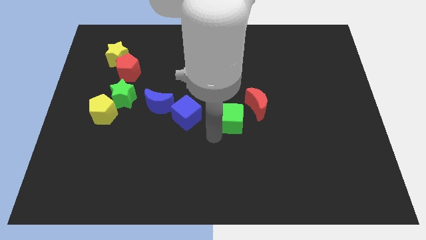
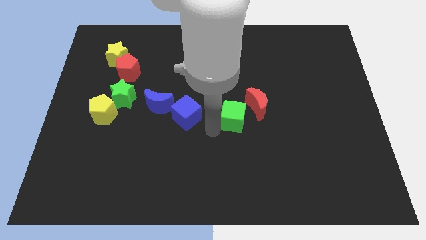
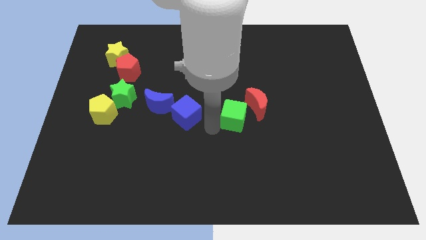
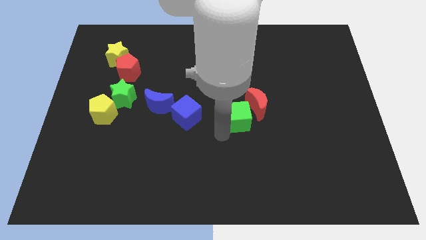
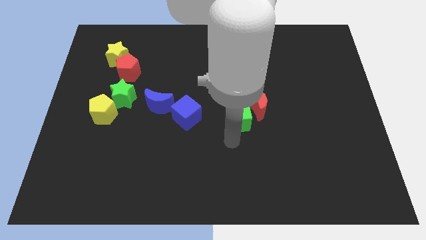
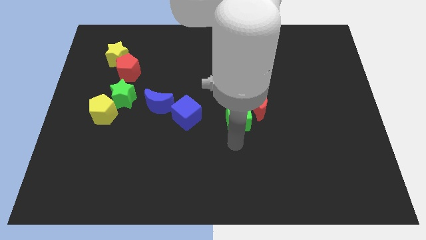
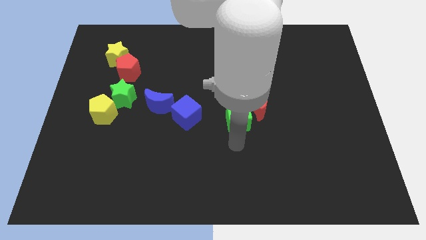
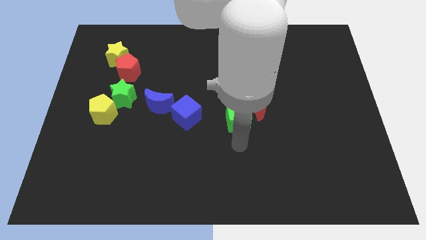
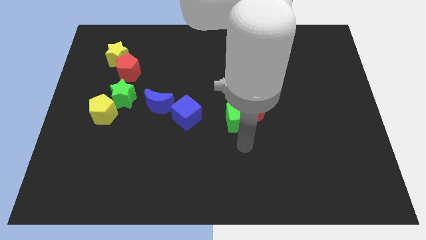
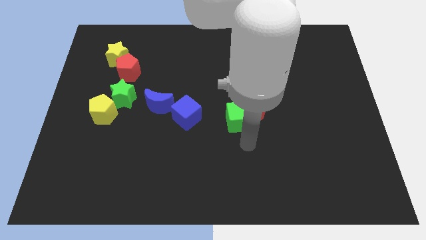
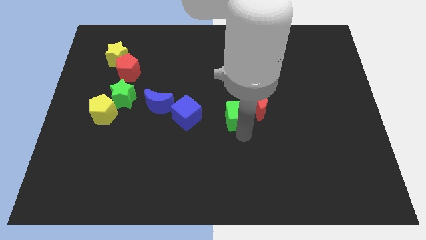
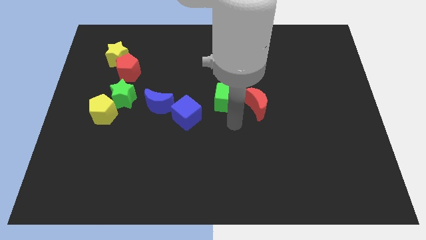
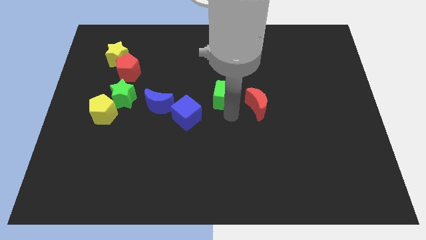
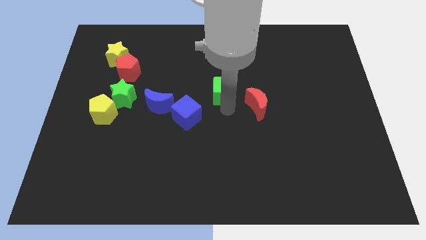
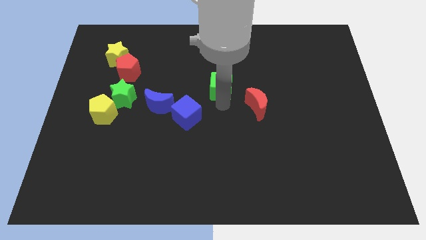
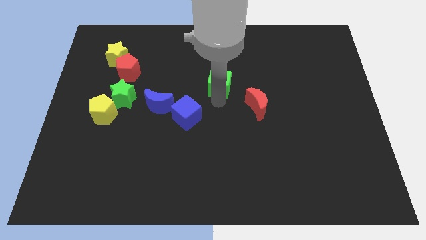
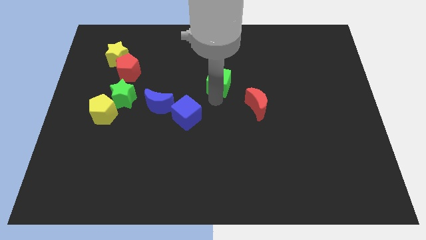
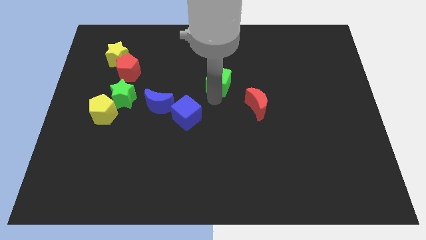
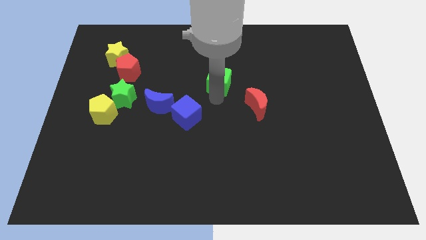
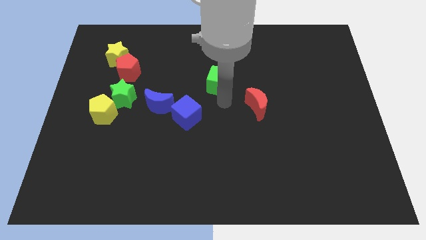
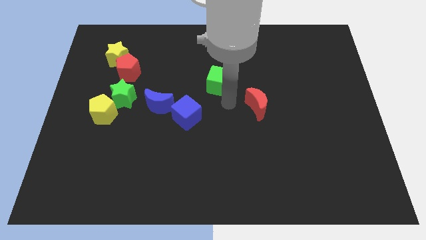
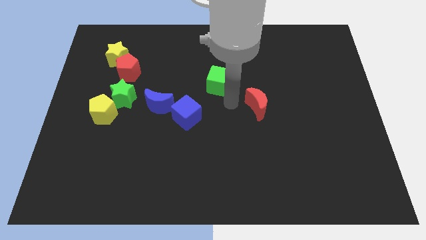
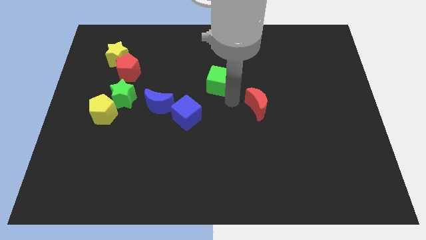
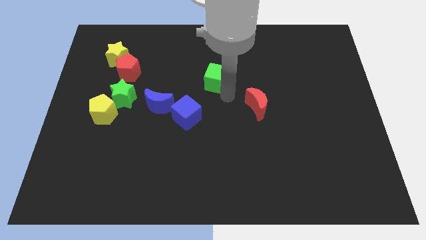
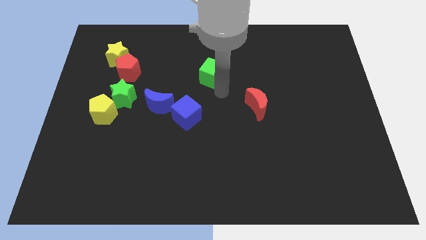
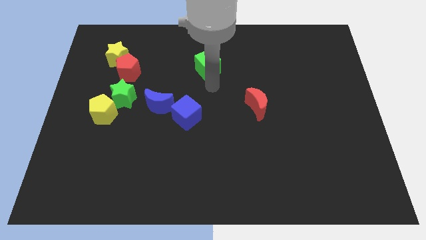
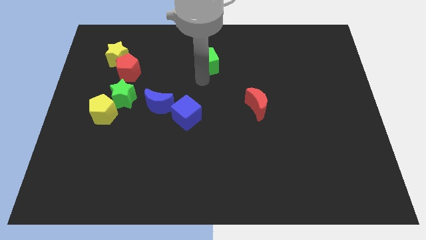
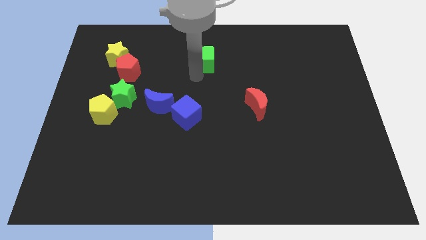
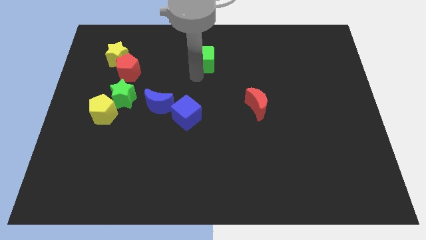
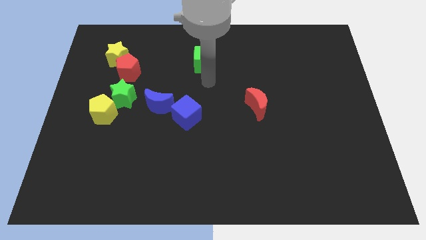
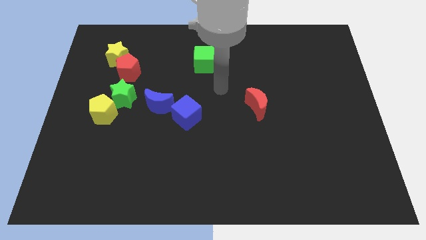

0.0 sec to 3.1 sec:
slide the green cube towards the top center

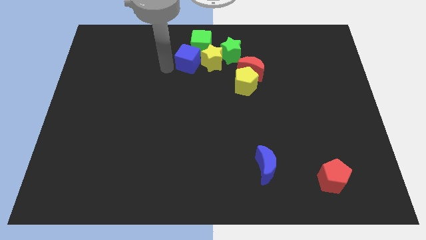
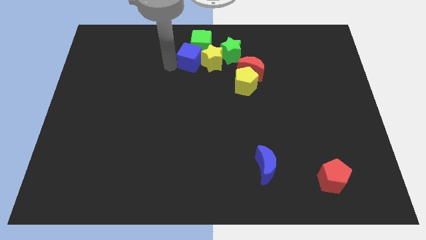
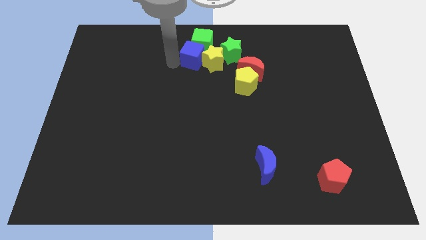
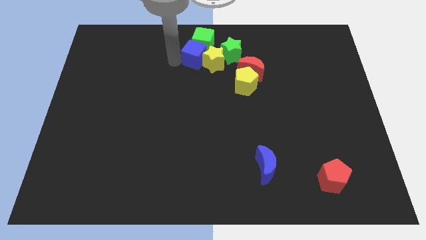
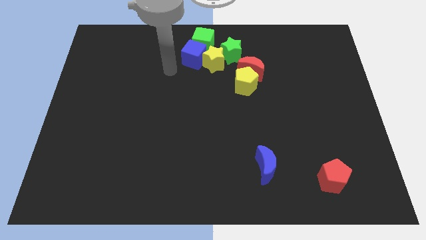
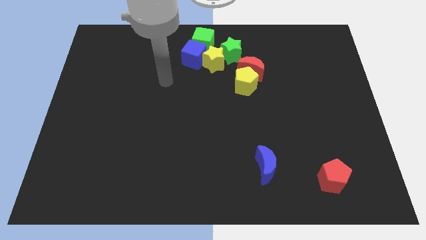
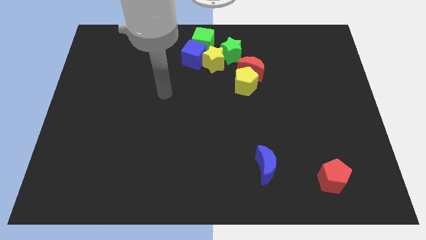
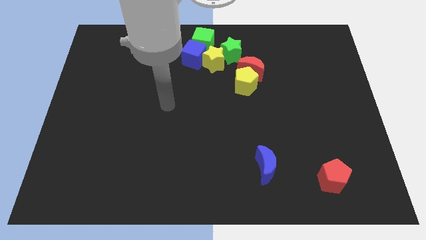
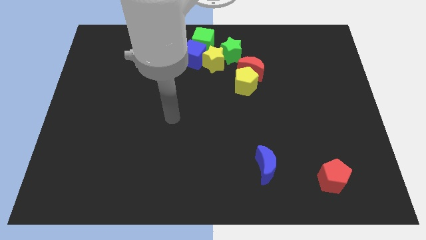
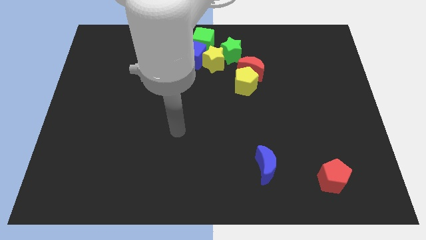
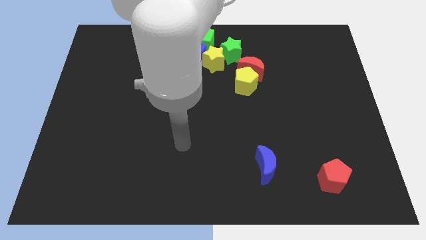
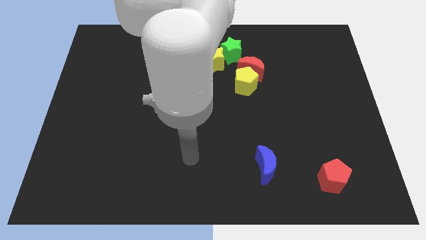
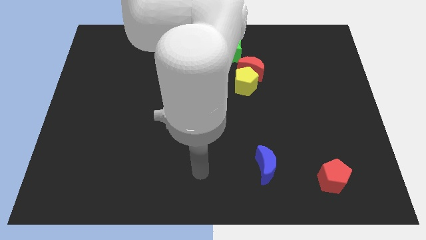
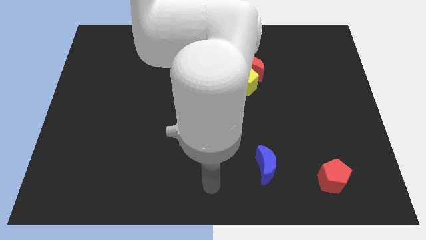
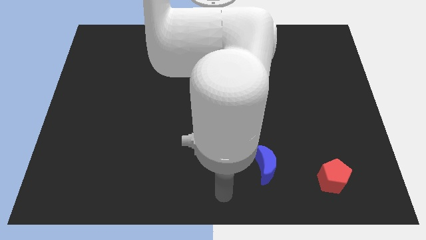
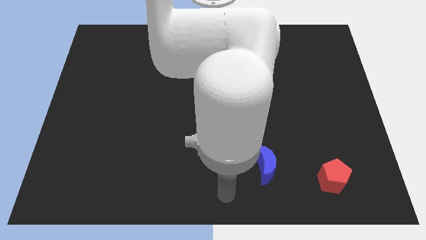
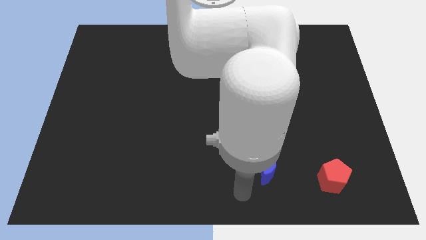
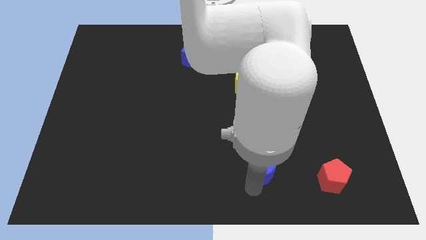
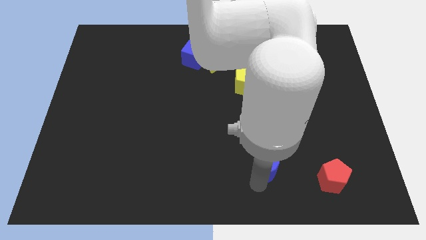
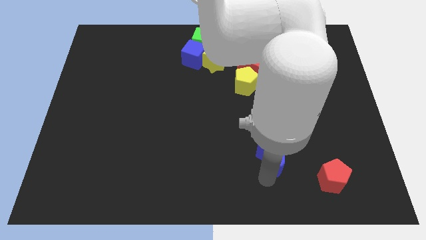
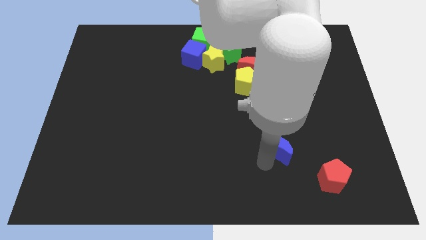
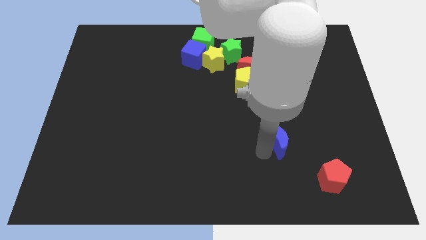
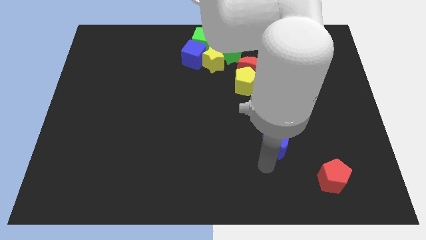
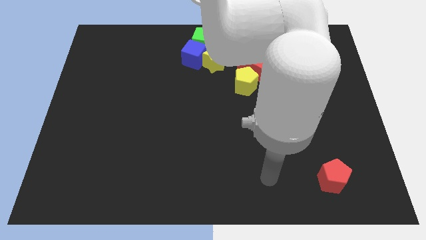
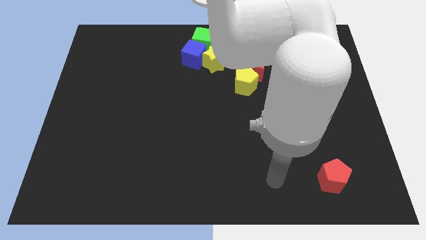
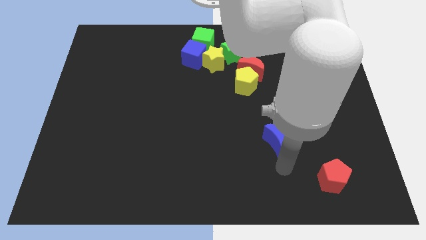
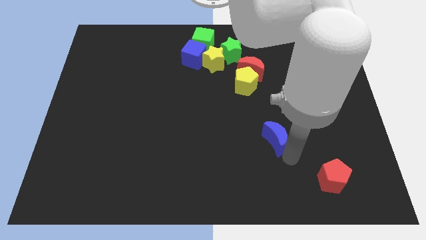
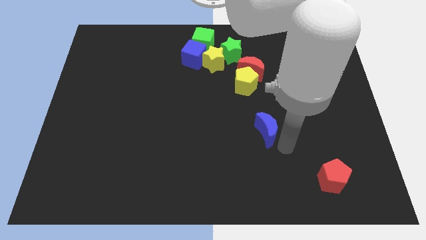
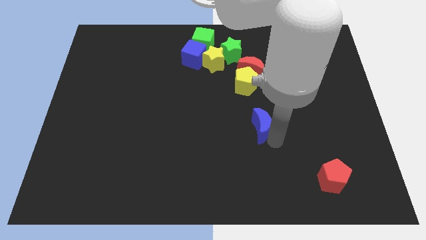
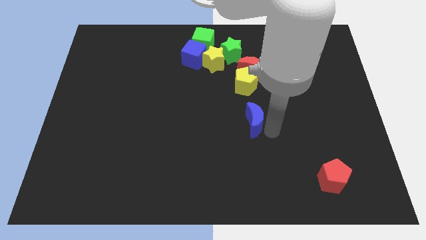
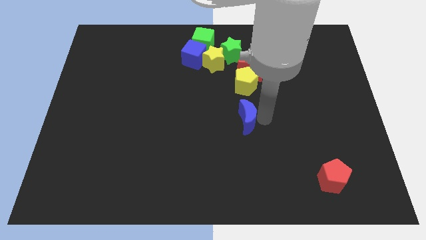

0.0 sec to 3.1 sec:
move the blue moon slightly to the bottom side of the yellow pentagon

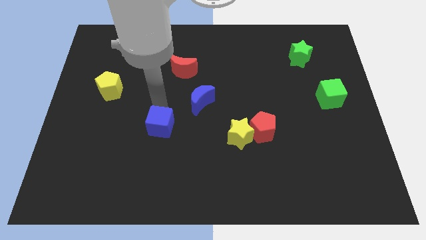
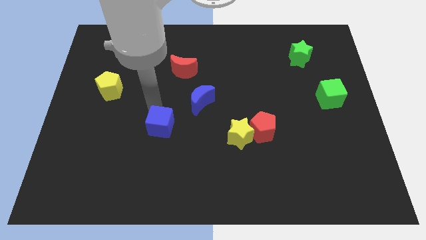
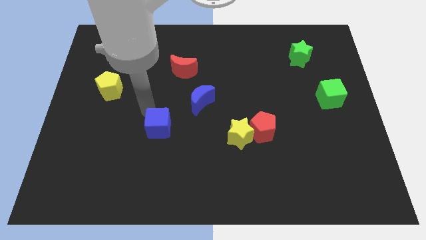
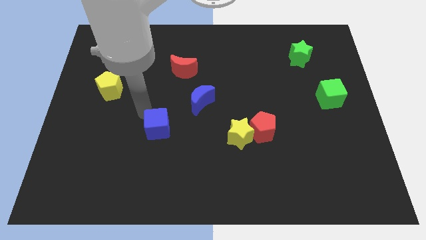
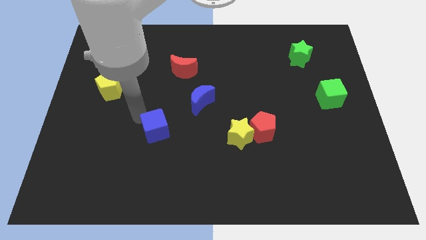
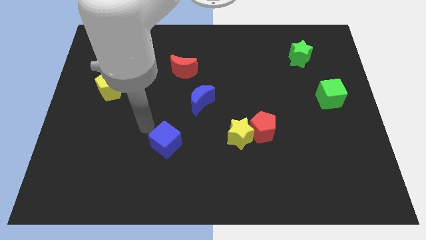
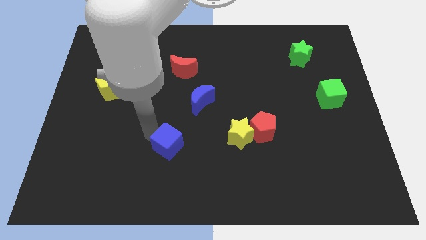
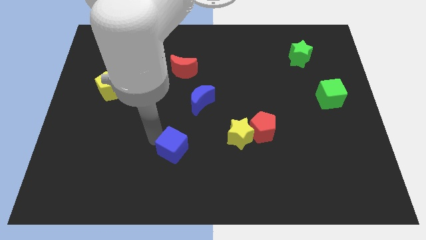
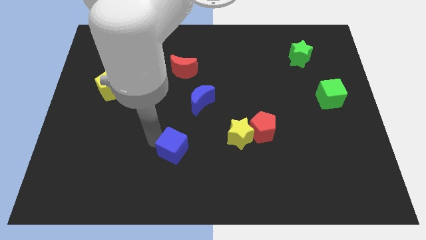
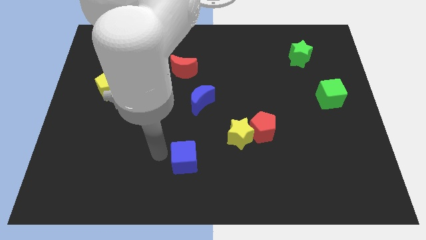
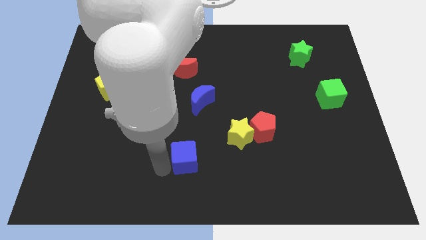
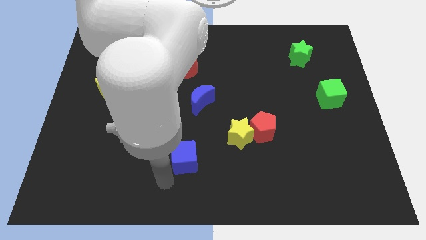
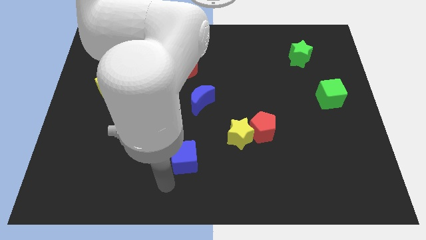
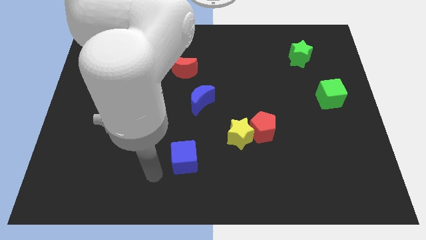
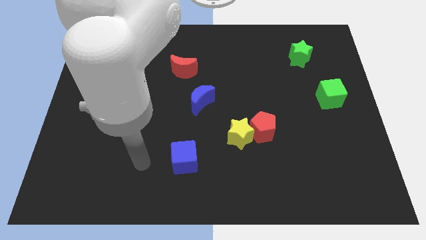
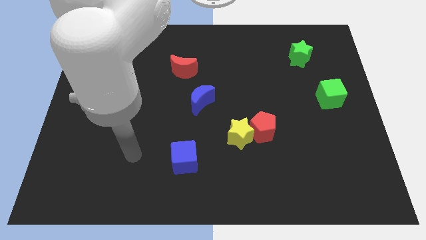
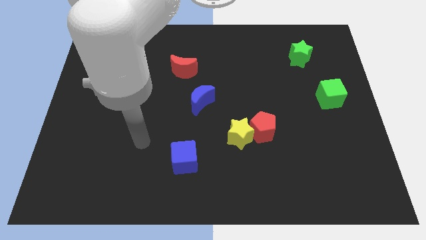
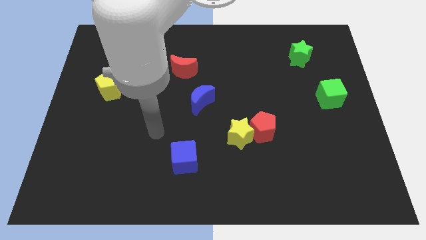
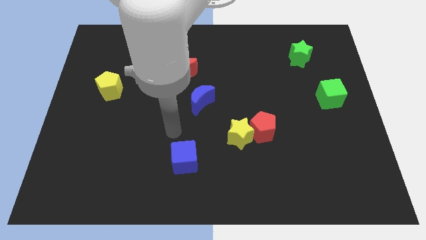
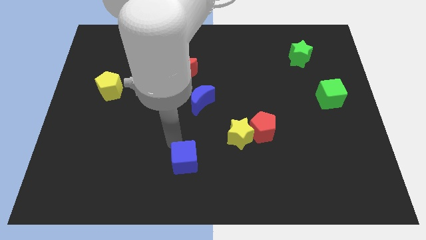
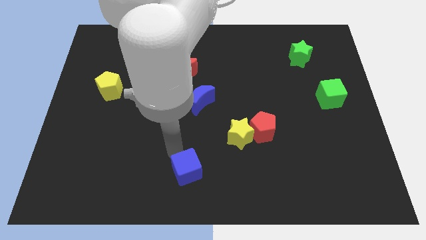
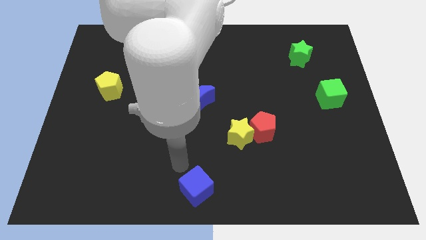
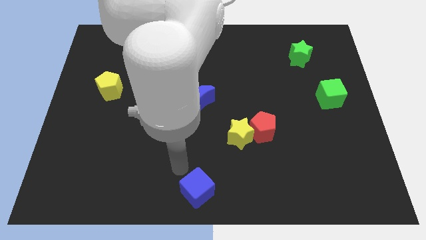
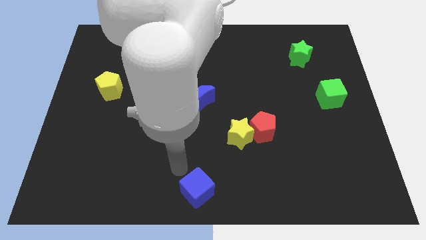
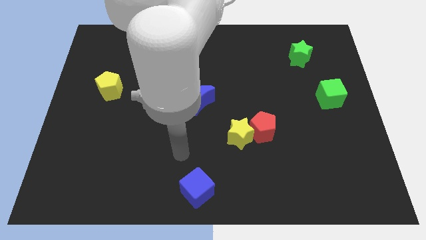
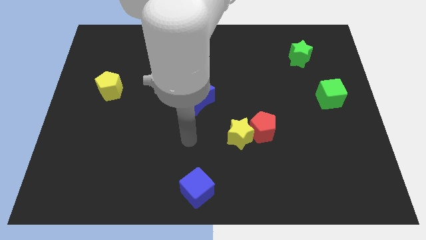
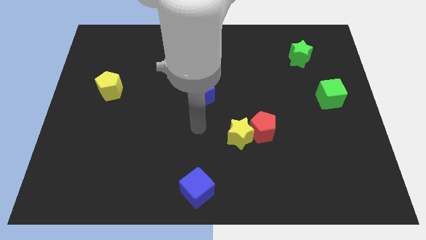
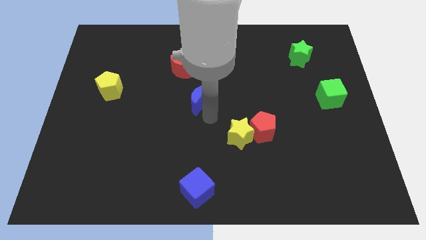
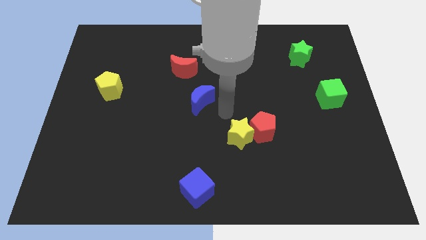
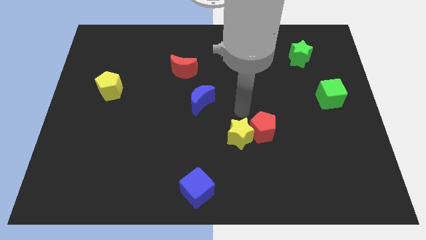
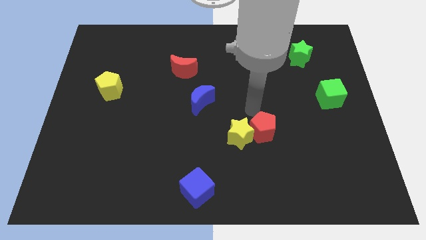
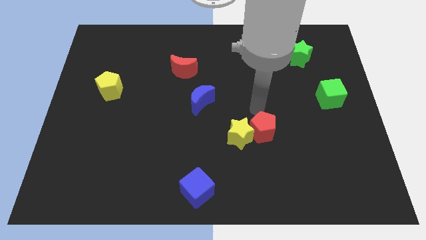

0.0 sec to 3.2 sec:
put the blue cube vertically below the blue moon
